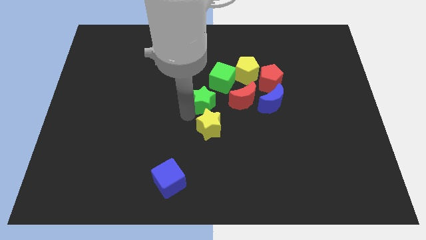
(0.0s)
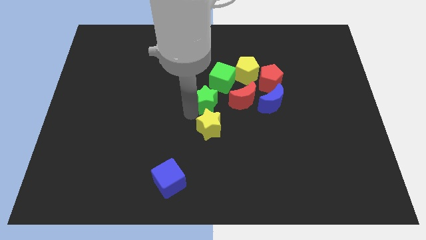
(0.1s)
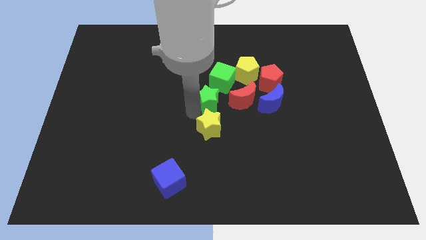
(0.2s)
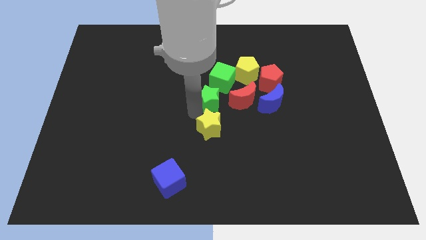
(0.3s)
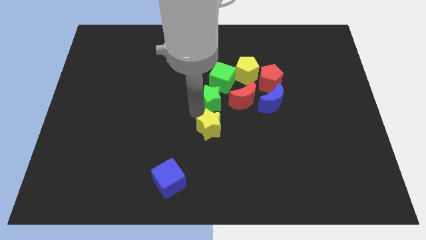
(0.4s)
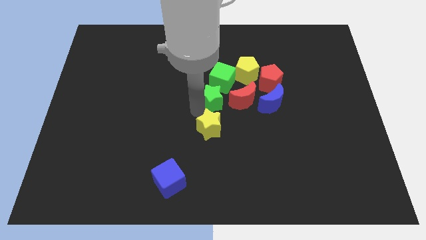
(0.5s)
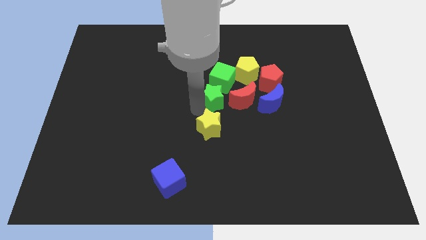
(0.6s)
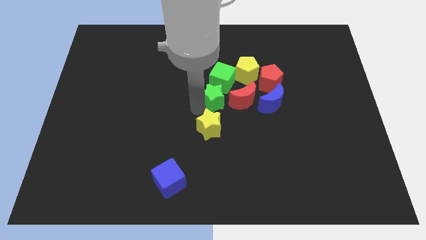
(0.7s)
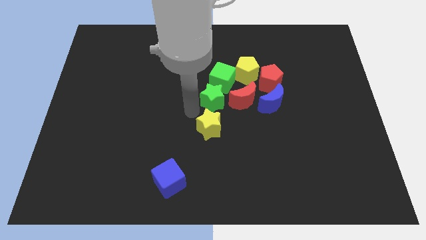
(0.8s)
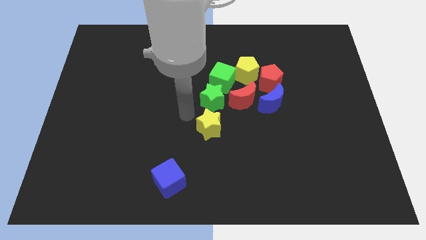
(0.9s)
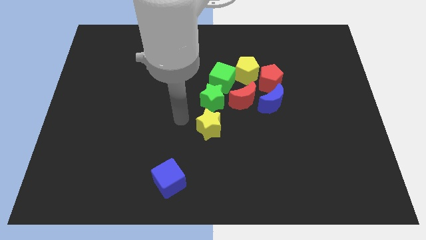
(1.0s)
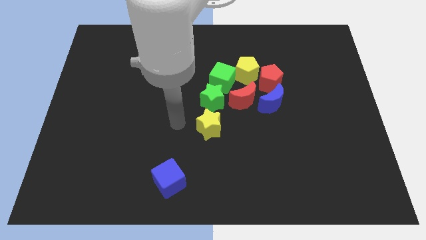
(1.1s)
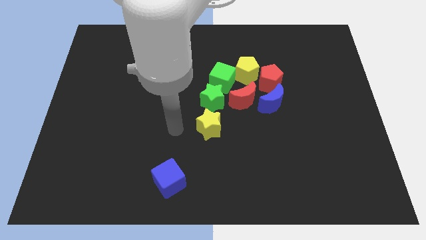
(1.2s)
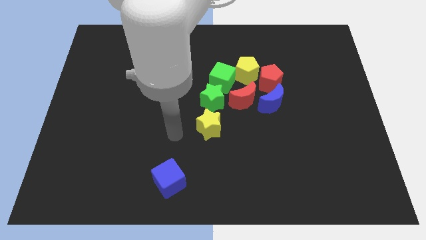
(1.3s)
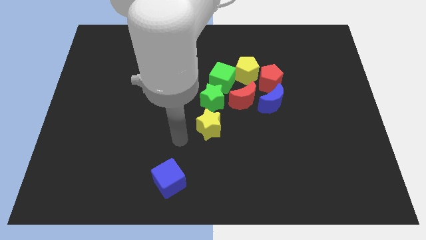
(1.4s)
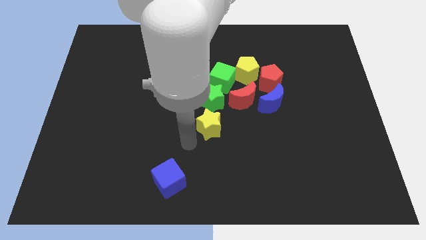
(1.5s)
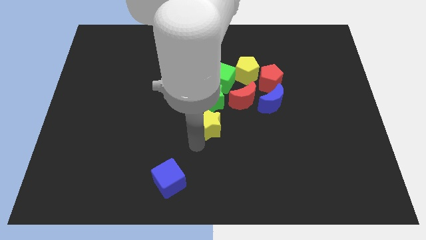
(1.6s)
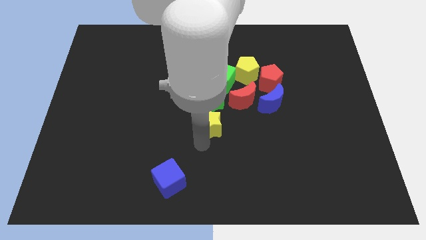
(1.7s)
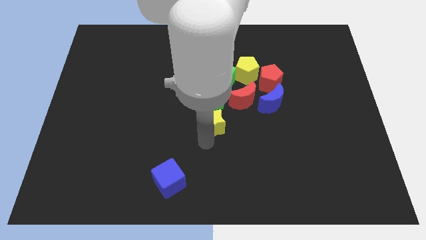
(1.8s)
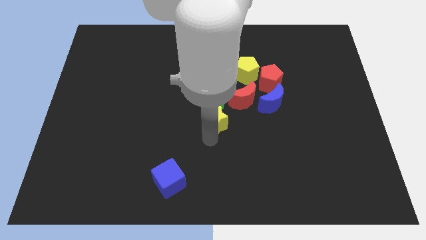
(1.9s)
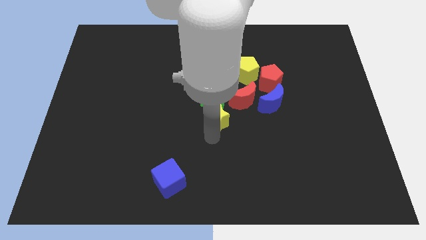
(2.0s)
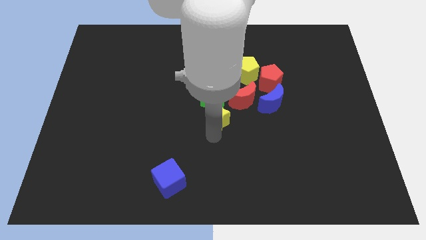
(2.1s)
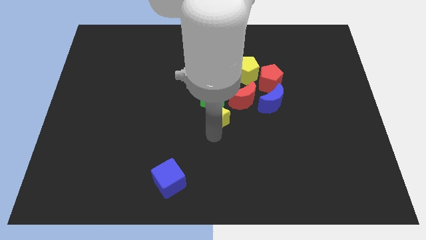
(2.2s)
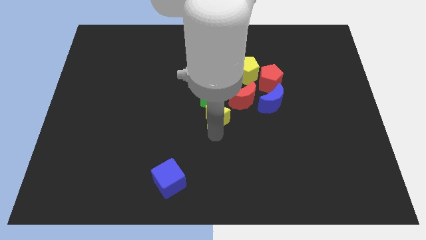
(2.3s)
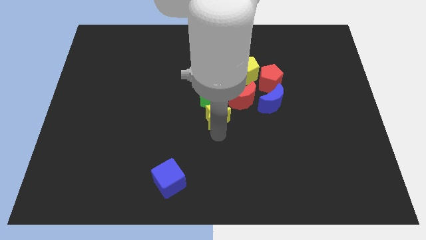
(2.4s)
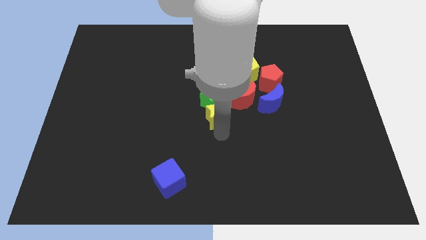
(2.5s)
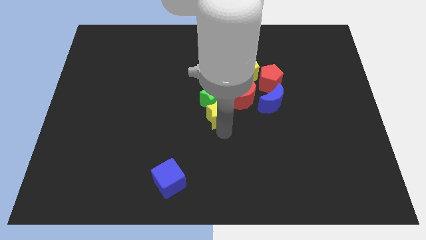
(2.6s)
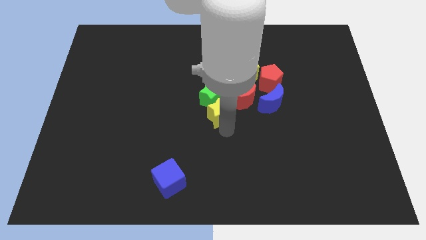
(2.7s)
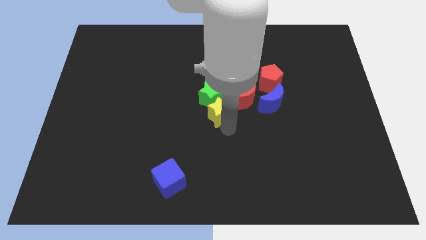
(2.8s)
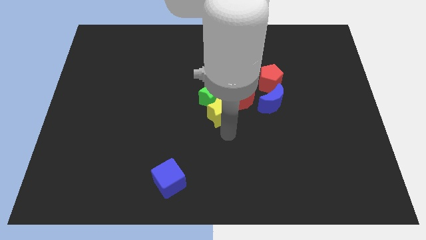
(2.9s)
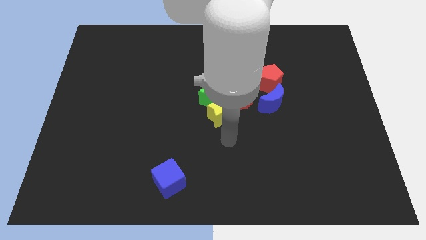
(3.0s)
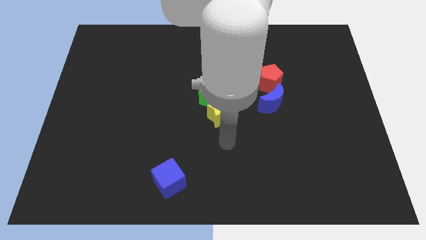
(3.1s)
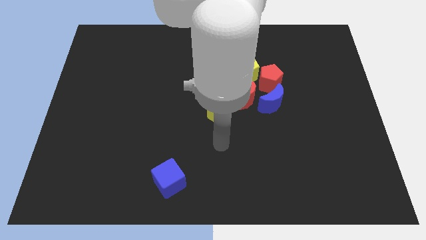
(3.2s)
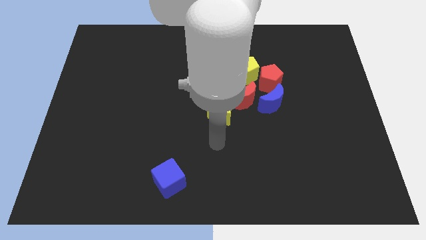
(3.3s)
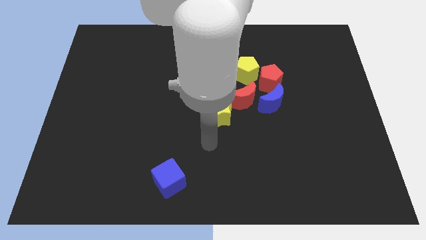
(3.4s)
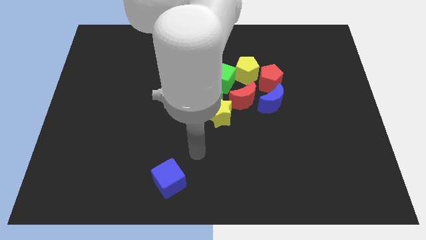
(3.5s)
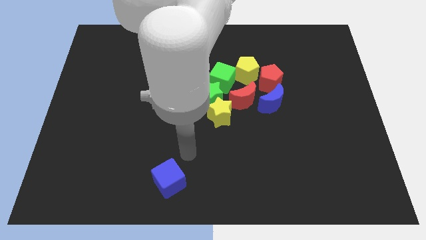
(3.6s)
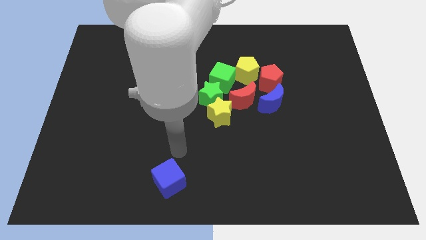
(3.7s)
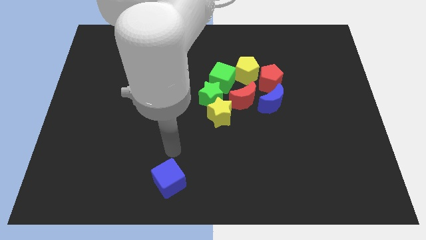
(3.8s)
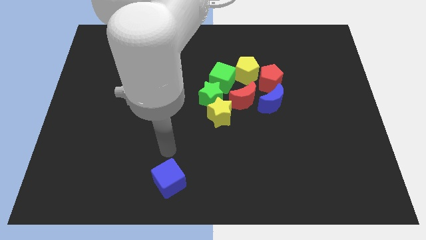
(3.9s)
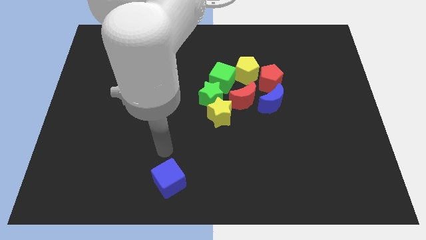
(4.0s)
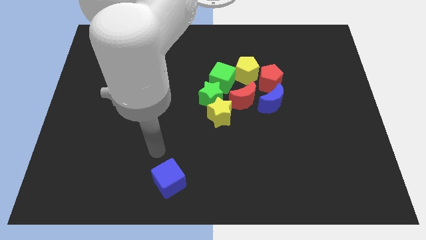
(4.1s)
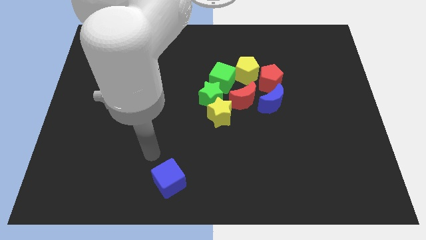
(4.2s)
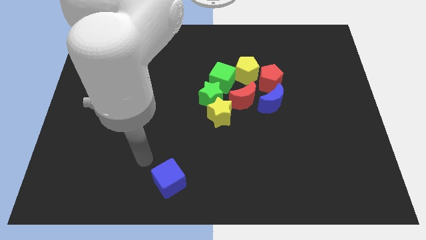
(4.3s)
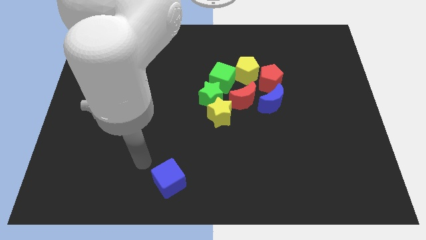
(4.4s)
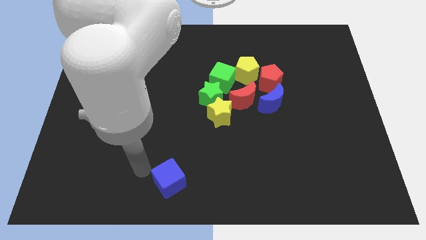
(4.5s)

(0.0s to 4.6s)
place the yellow star below the green star

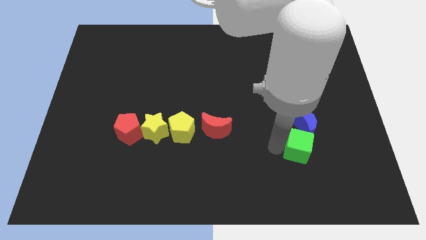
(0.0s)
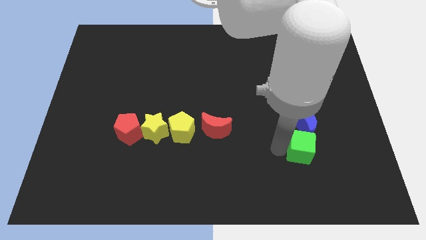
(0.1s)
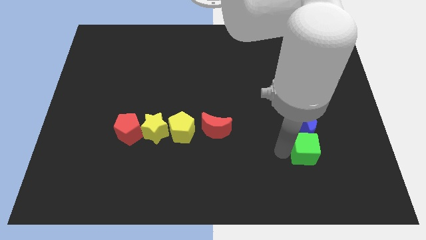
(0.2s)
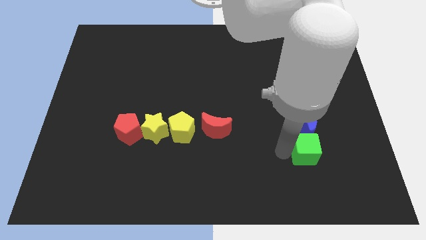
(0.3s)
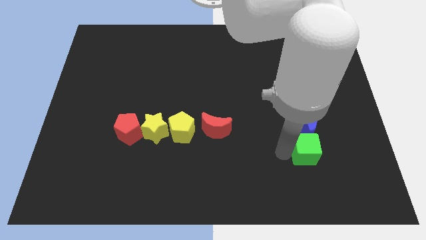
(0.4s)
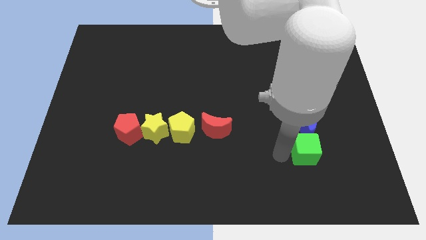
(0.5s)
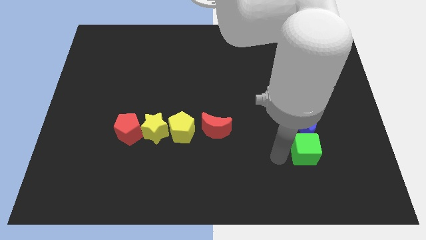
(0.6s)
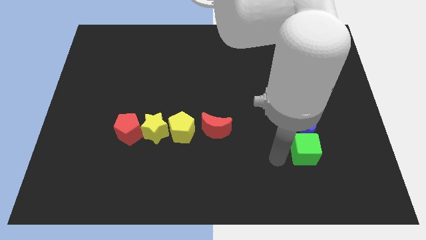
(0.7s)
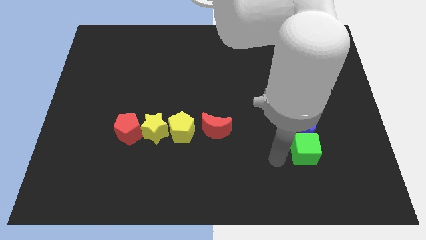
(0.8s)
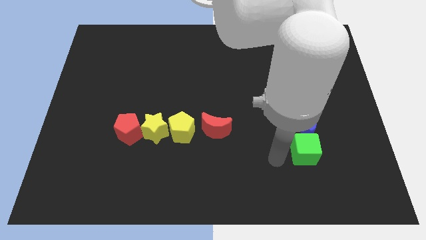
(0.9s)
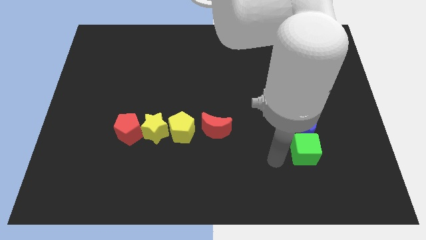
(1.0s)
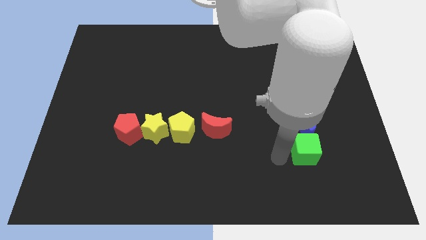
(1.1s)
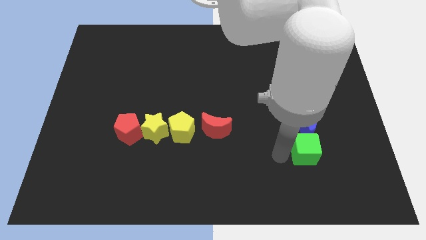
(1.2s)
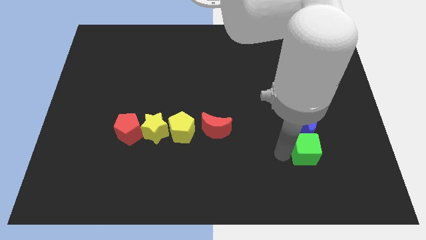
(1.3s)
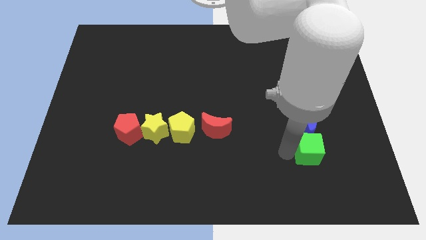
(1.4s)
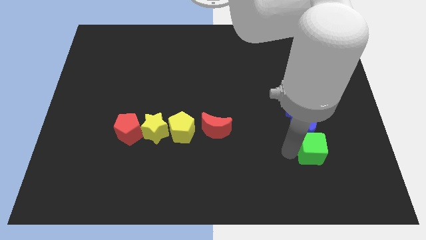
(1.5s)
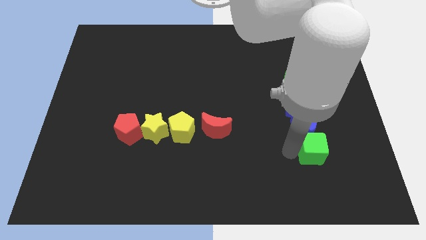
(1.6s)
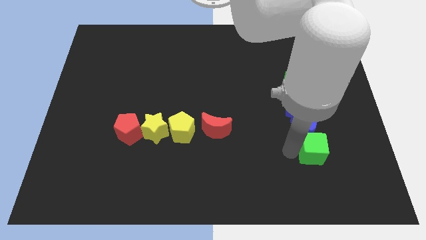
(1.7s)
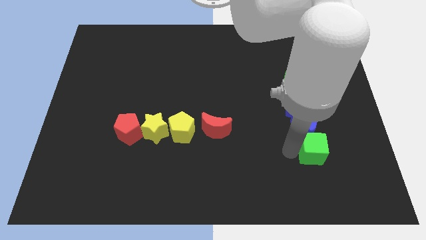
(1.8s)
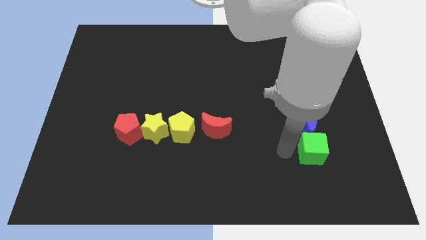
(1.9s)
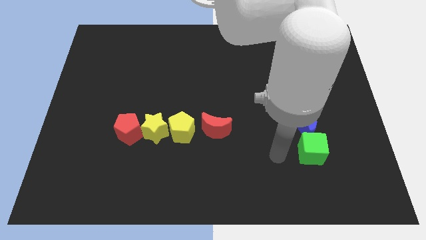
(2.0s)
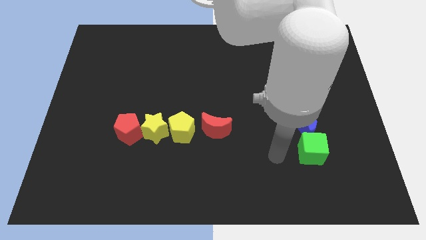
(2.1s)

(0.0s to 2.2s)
place green cube below the blue moon

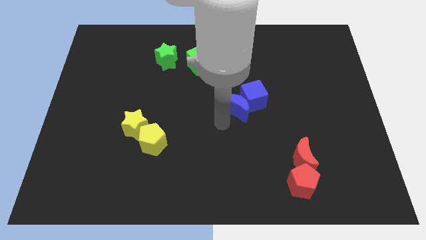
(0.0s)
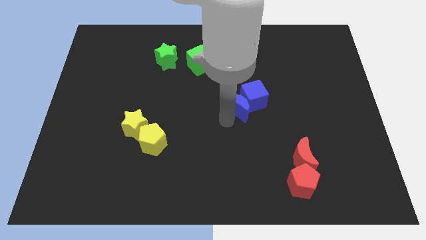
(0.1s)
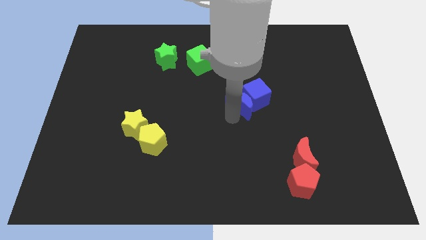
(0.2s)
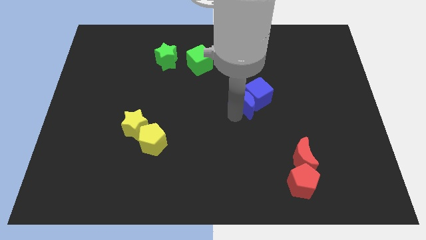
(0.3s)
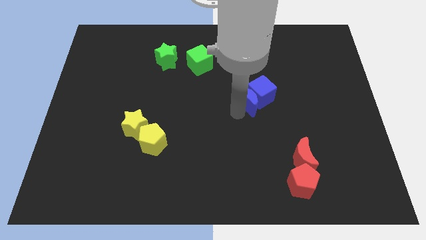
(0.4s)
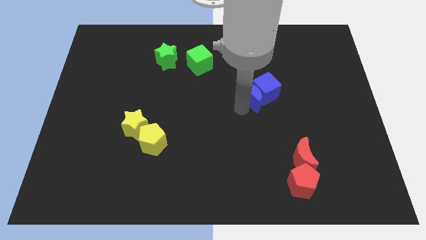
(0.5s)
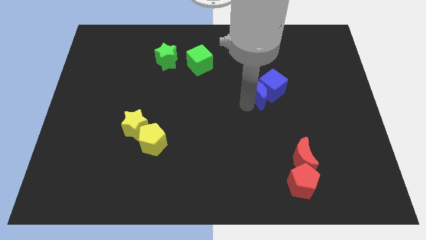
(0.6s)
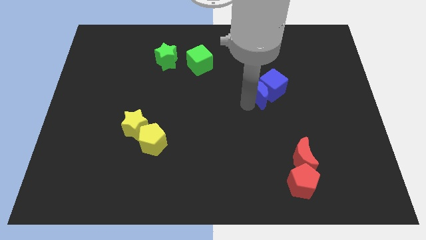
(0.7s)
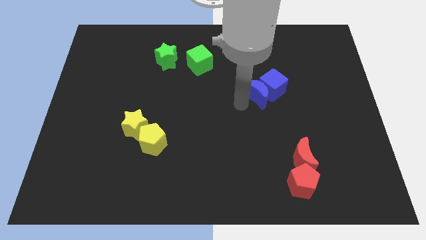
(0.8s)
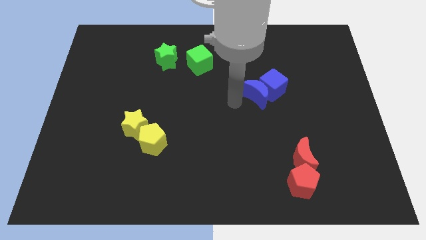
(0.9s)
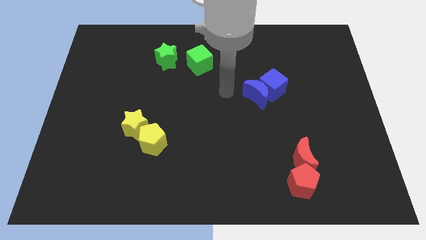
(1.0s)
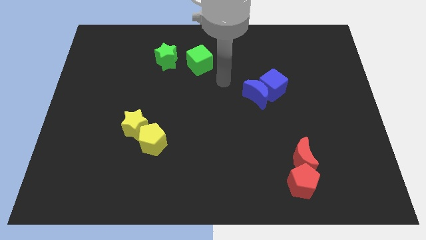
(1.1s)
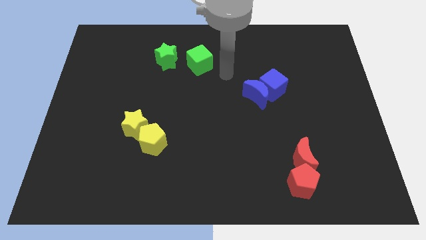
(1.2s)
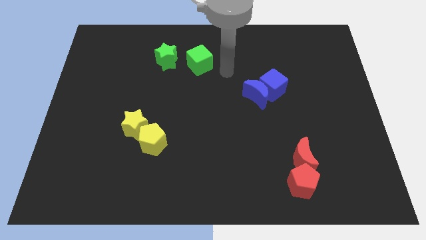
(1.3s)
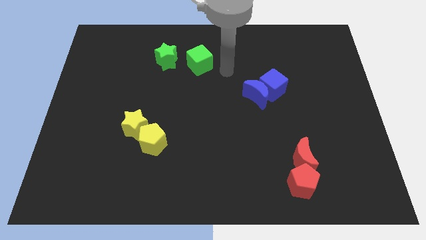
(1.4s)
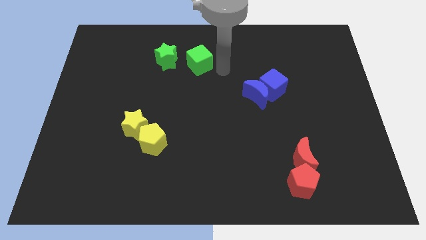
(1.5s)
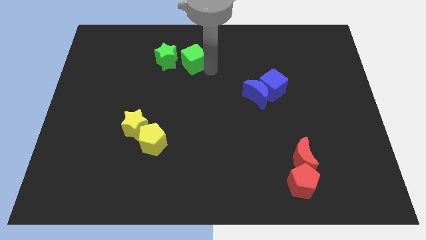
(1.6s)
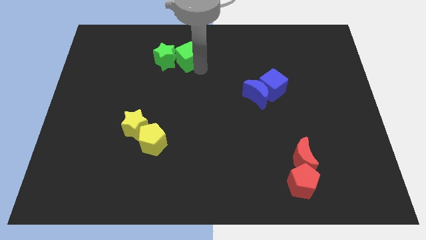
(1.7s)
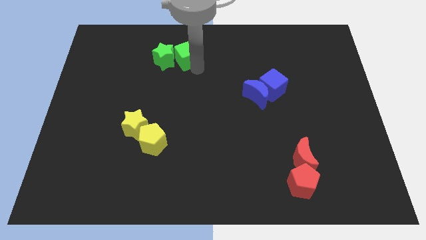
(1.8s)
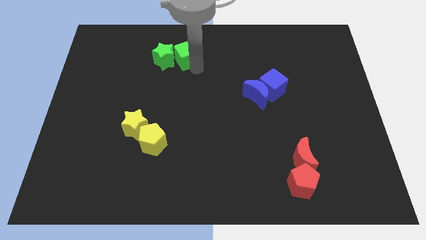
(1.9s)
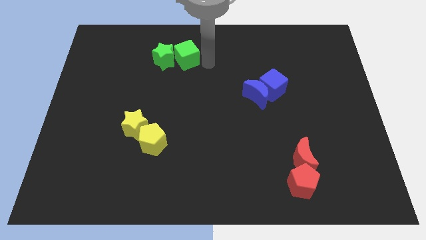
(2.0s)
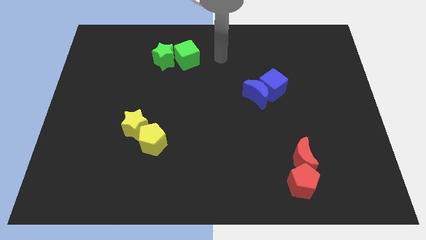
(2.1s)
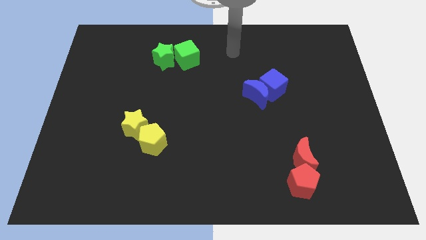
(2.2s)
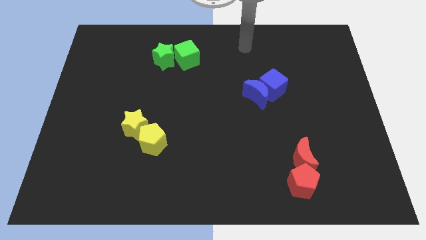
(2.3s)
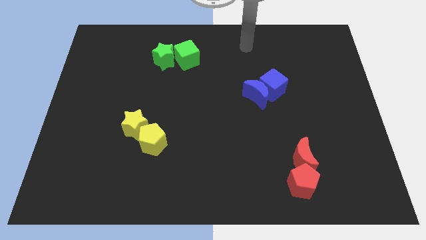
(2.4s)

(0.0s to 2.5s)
push the group of blue blocks slightly towards the top right of the board
